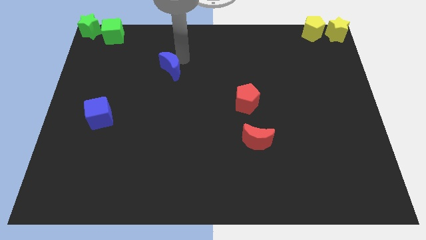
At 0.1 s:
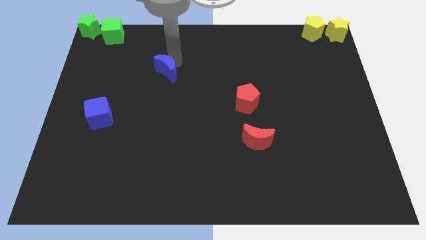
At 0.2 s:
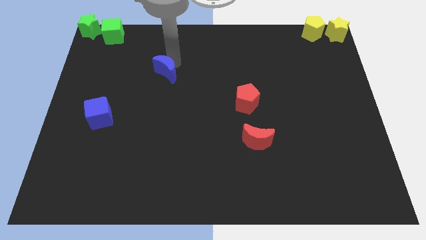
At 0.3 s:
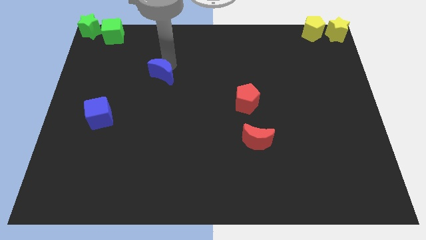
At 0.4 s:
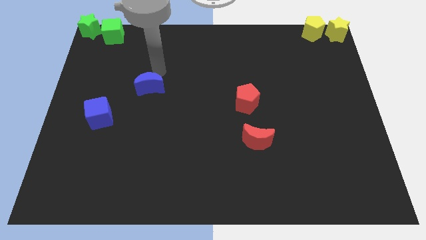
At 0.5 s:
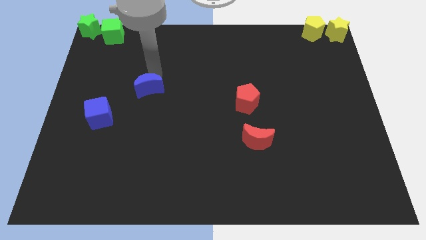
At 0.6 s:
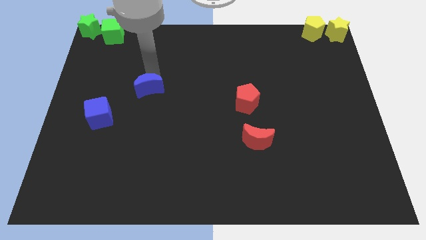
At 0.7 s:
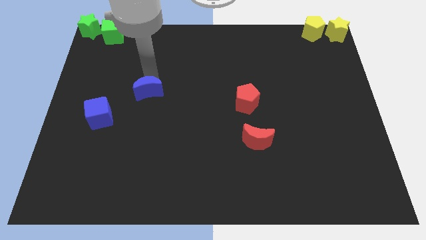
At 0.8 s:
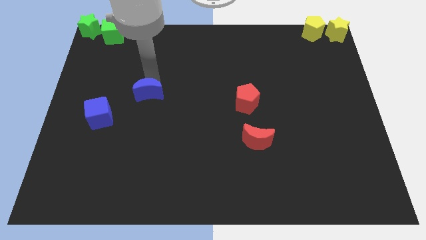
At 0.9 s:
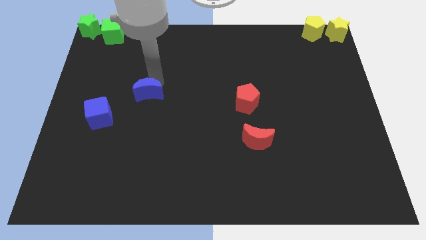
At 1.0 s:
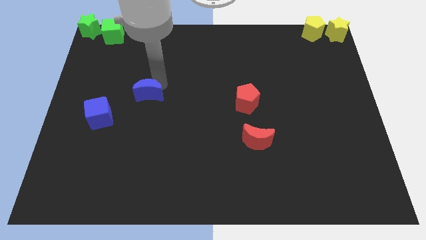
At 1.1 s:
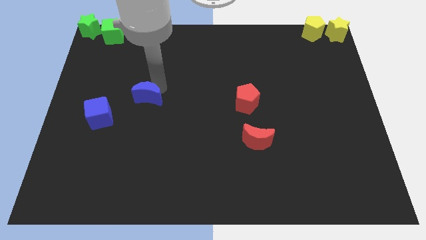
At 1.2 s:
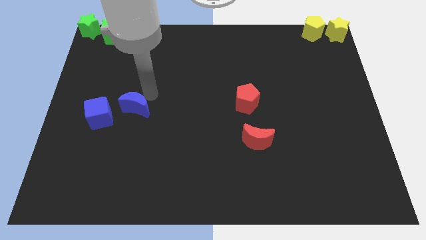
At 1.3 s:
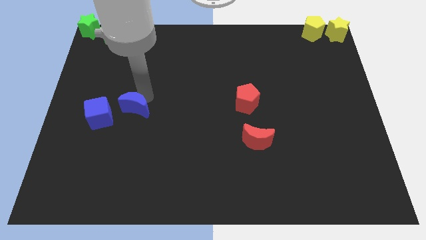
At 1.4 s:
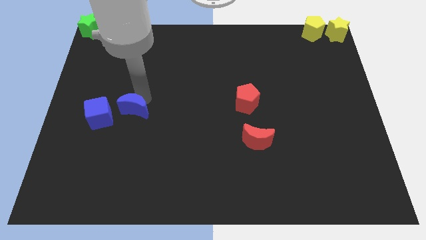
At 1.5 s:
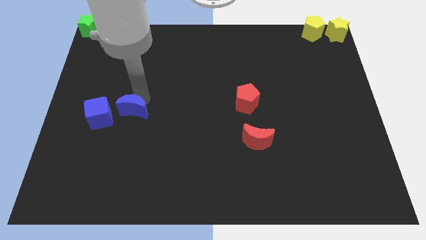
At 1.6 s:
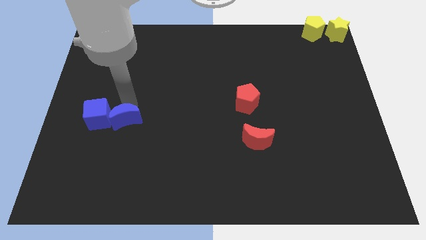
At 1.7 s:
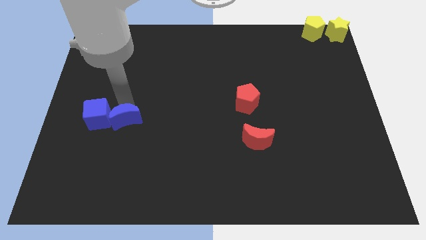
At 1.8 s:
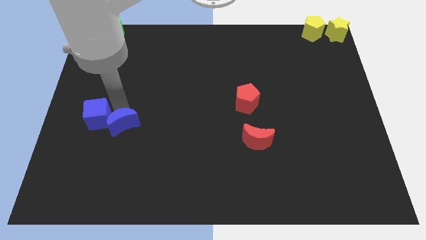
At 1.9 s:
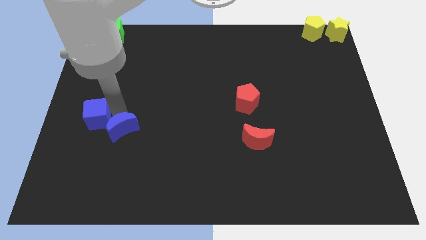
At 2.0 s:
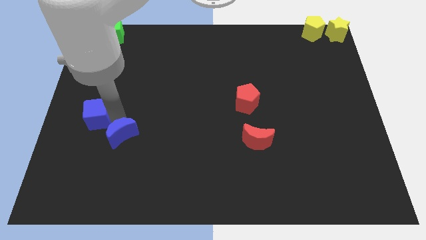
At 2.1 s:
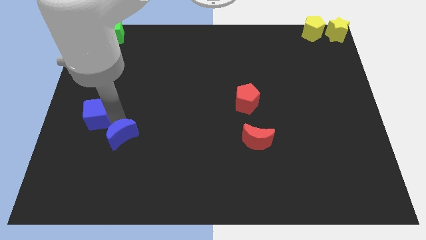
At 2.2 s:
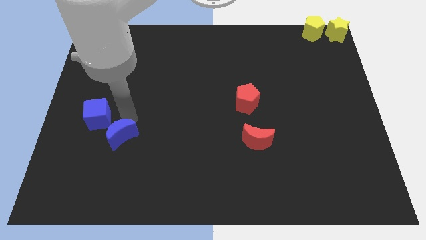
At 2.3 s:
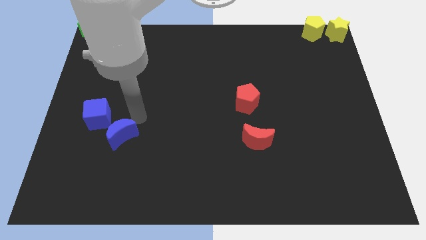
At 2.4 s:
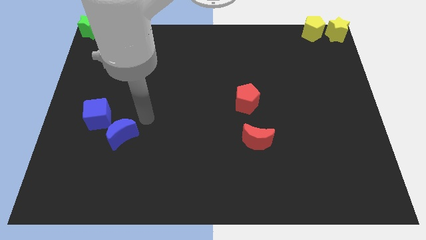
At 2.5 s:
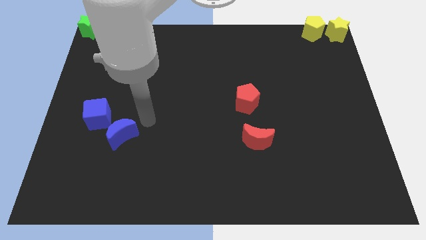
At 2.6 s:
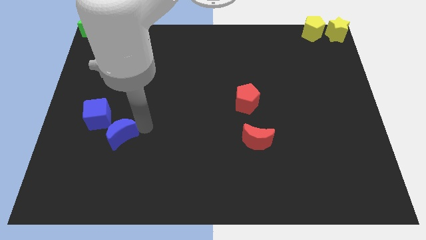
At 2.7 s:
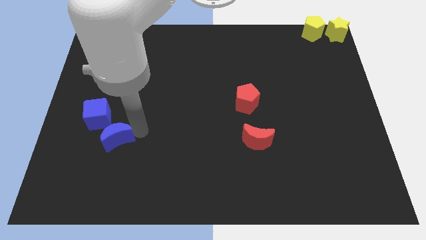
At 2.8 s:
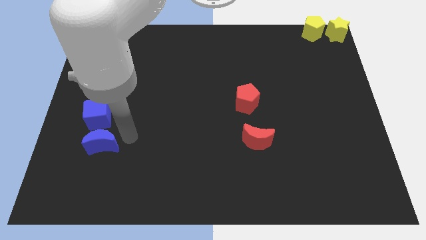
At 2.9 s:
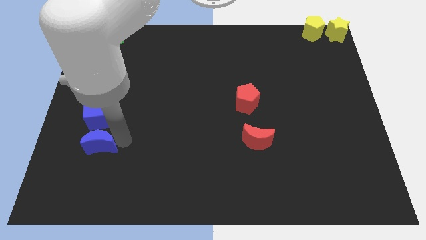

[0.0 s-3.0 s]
move the blue moon to the bottom of blue cube

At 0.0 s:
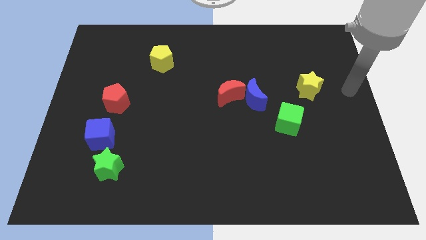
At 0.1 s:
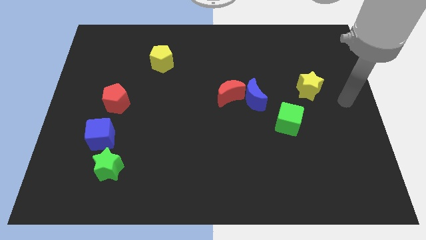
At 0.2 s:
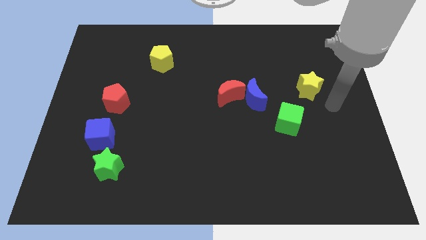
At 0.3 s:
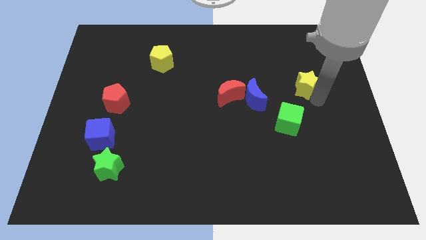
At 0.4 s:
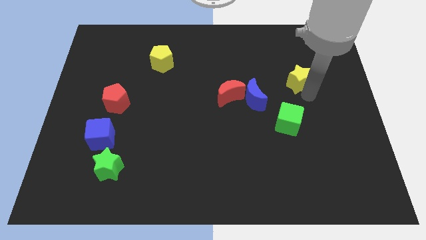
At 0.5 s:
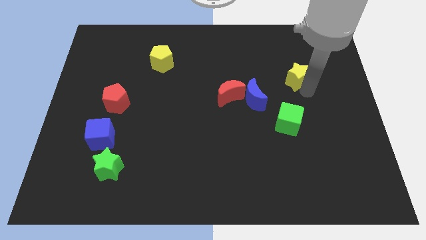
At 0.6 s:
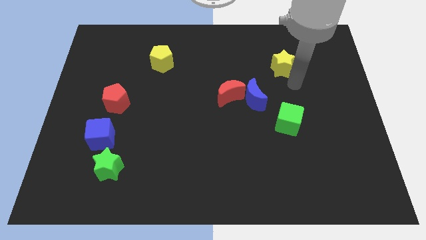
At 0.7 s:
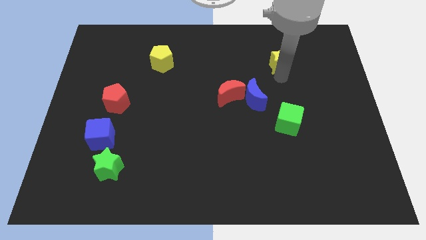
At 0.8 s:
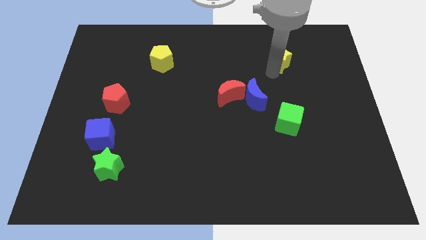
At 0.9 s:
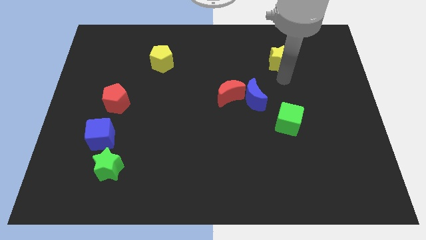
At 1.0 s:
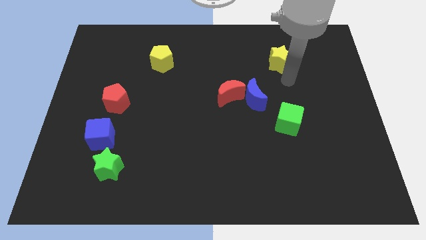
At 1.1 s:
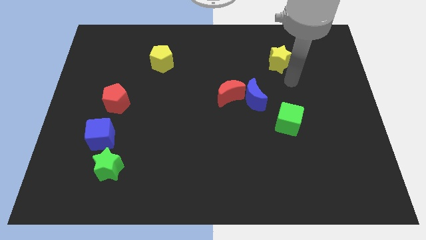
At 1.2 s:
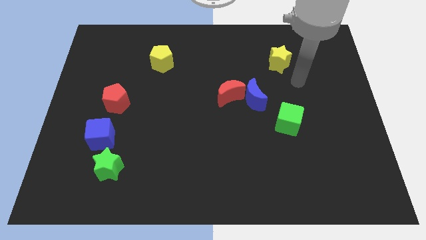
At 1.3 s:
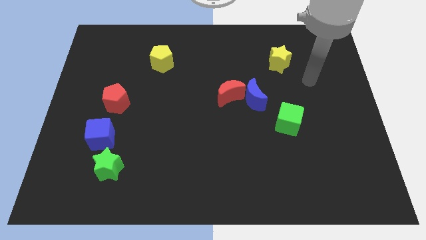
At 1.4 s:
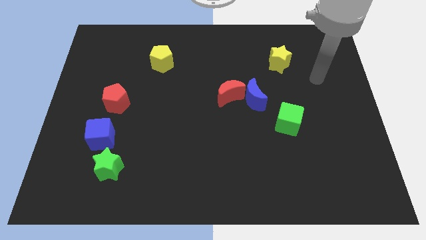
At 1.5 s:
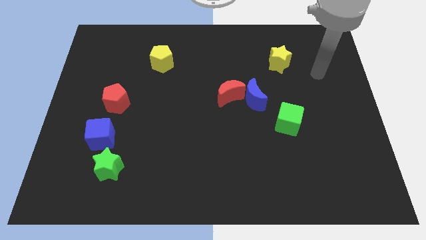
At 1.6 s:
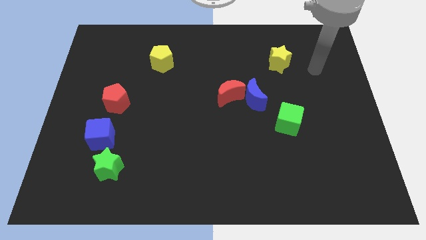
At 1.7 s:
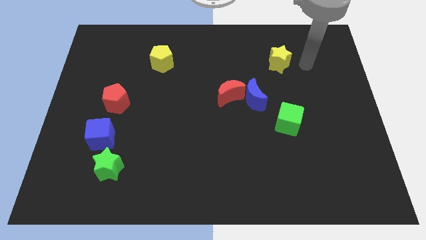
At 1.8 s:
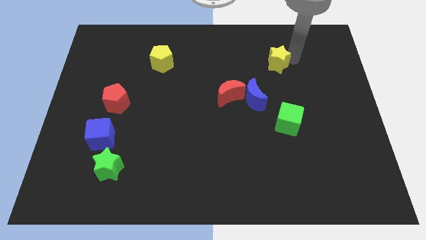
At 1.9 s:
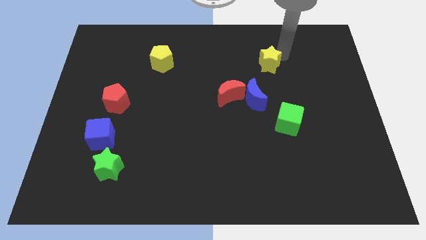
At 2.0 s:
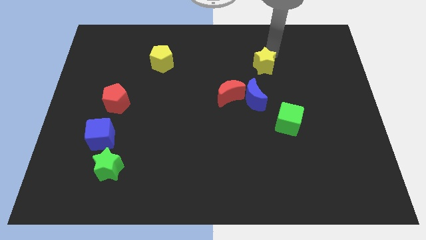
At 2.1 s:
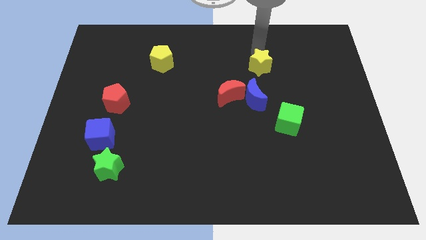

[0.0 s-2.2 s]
move yellow star above blue moon

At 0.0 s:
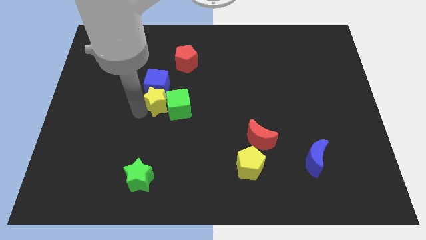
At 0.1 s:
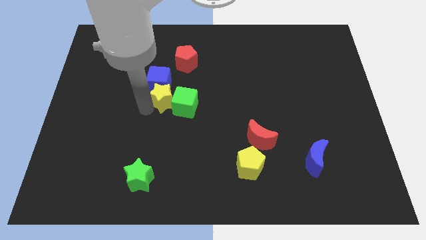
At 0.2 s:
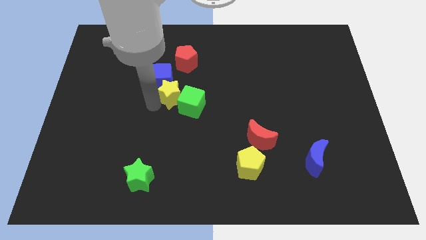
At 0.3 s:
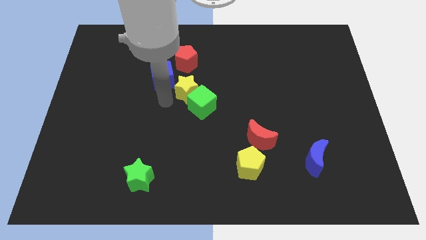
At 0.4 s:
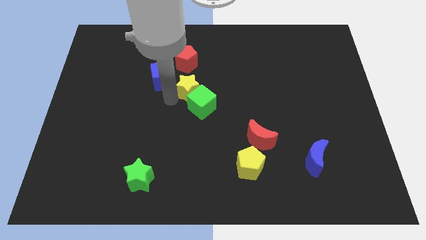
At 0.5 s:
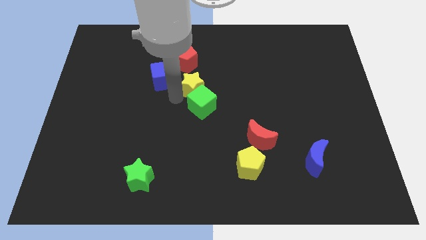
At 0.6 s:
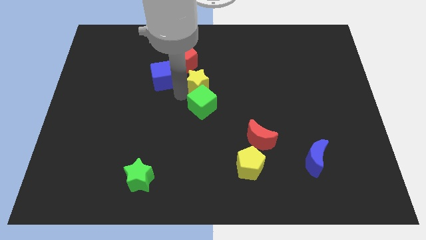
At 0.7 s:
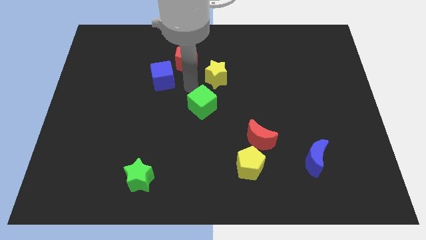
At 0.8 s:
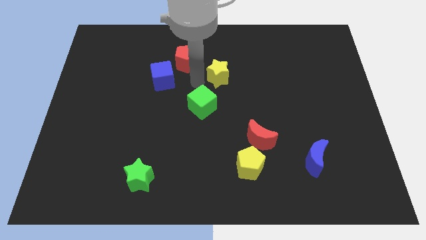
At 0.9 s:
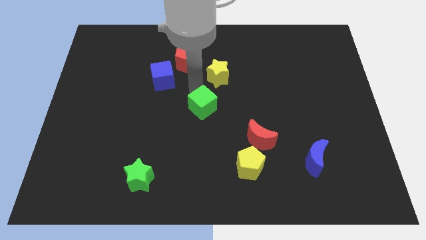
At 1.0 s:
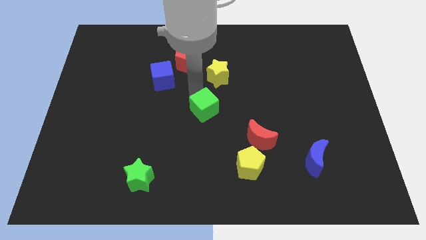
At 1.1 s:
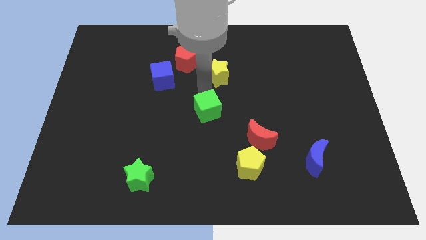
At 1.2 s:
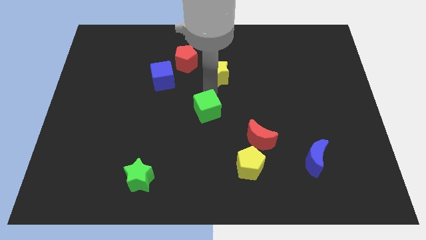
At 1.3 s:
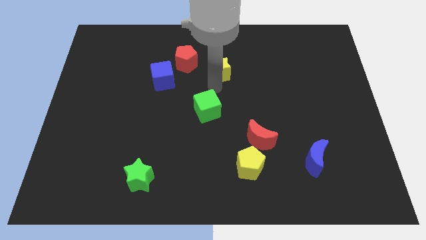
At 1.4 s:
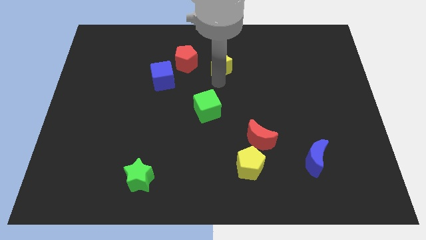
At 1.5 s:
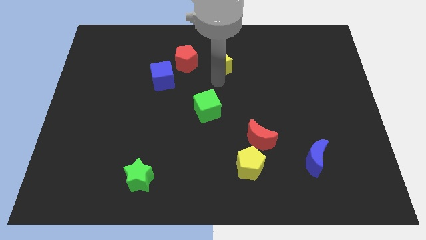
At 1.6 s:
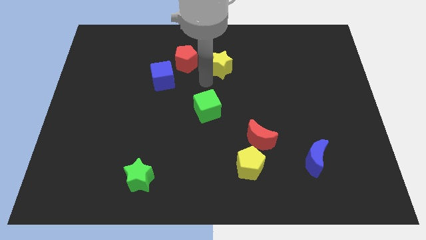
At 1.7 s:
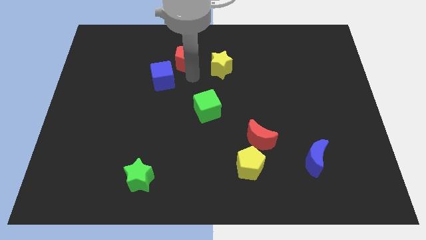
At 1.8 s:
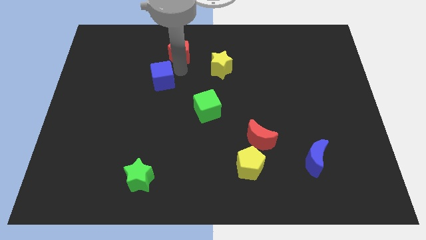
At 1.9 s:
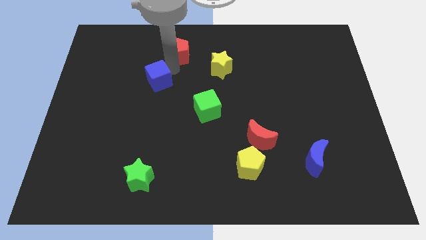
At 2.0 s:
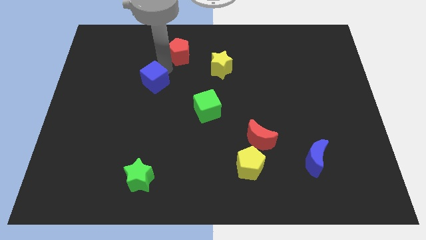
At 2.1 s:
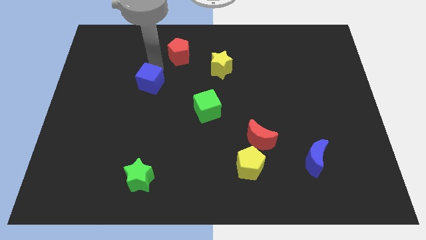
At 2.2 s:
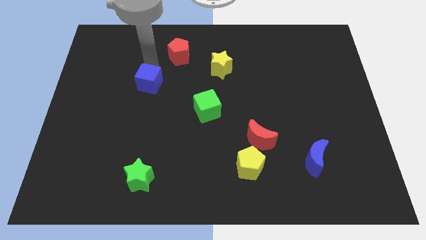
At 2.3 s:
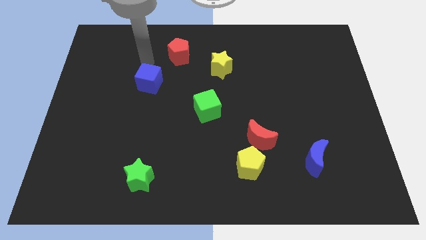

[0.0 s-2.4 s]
separate the red pentagon and blue cube

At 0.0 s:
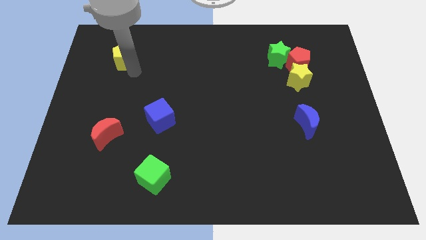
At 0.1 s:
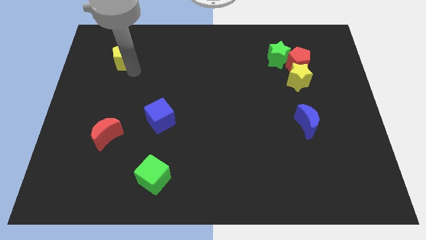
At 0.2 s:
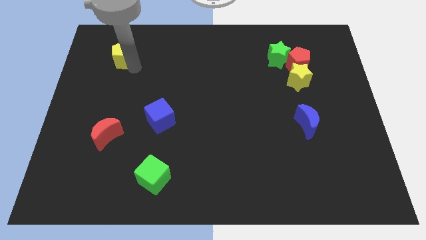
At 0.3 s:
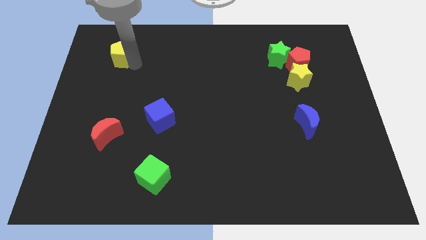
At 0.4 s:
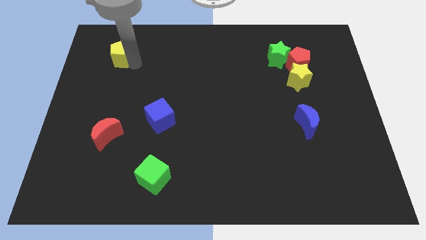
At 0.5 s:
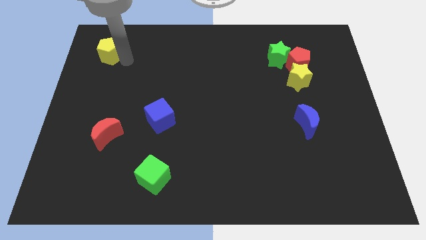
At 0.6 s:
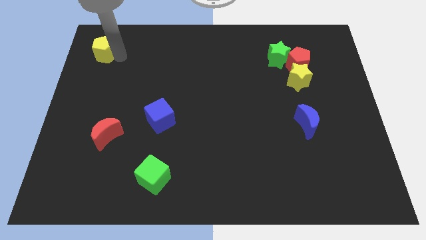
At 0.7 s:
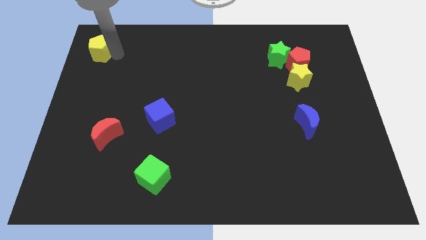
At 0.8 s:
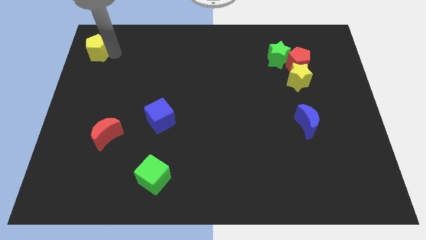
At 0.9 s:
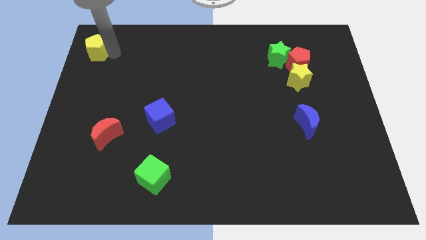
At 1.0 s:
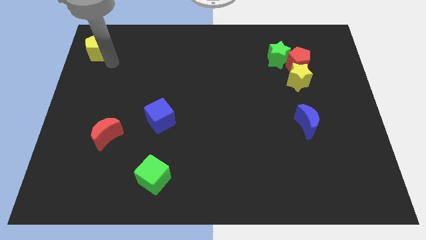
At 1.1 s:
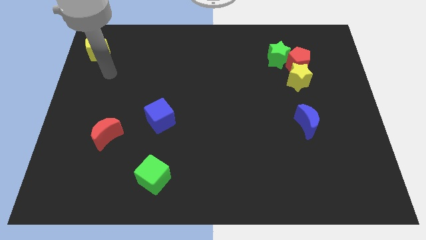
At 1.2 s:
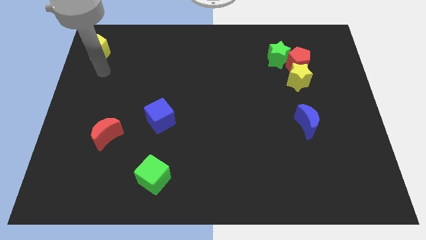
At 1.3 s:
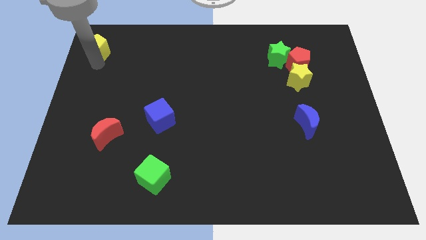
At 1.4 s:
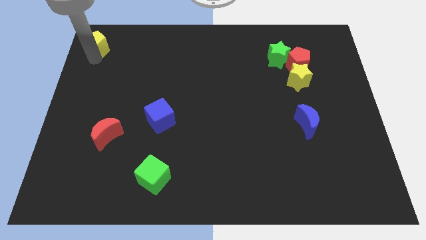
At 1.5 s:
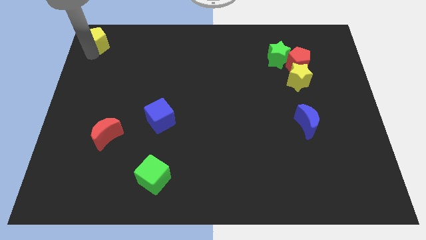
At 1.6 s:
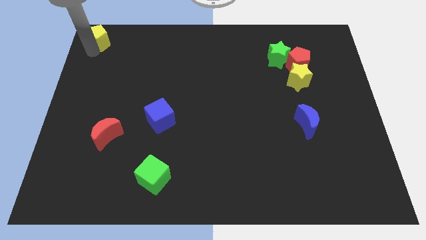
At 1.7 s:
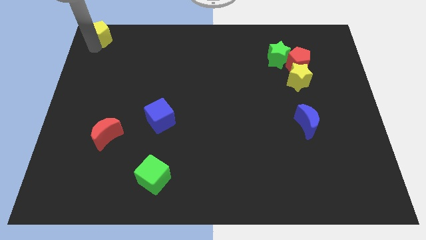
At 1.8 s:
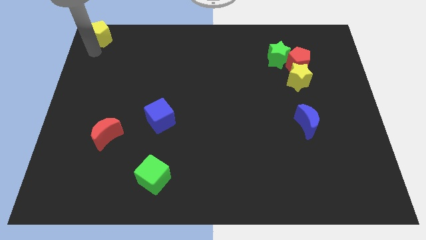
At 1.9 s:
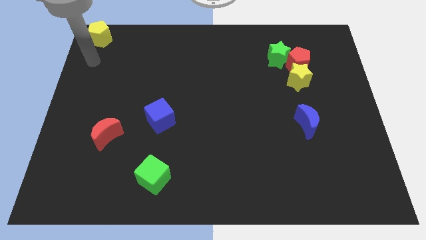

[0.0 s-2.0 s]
place the yellow pentagon at the top left corner of the board
